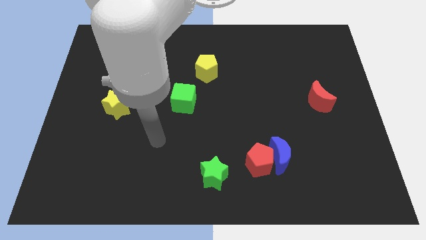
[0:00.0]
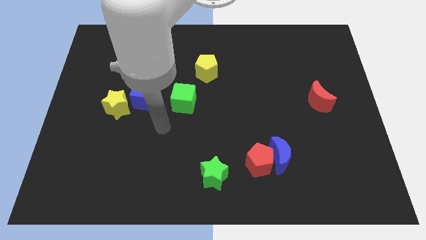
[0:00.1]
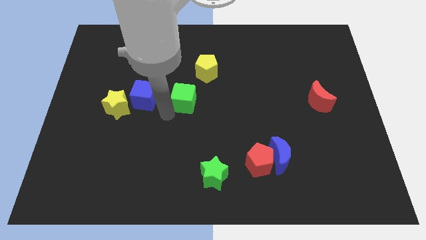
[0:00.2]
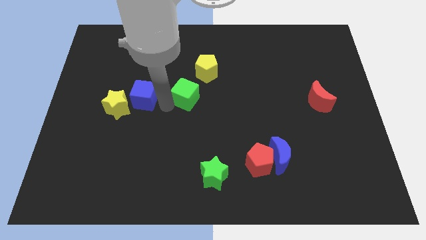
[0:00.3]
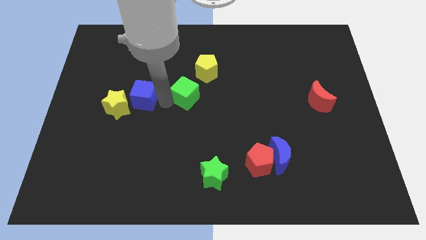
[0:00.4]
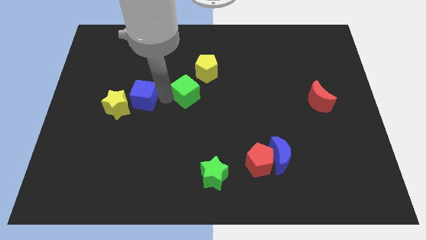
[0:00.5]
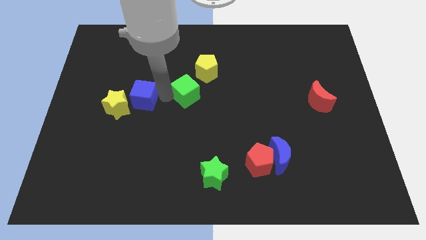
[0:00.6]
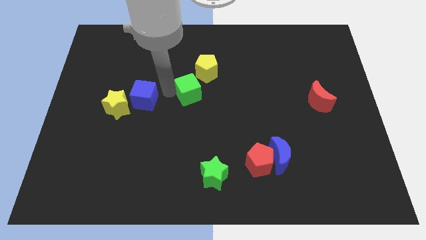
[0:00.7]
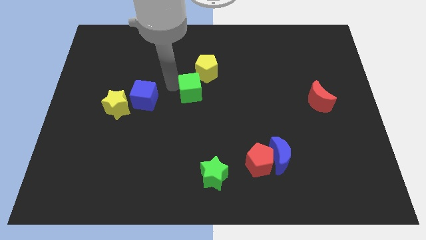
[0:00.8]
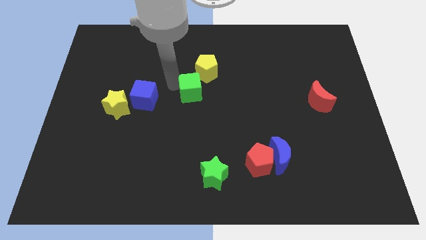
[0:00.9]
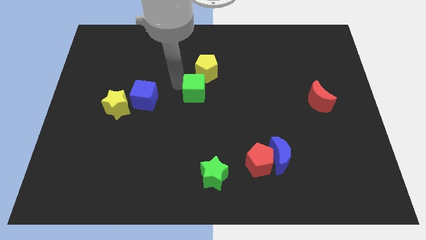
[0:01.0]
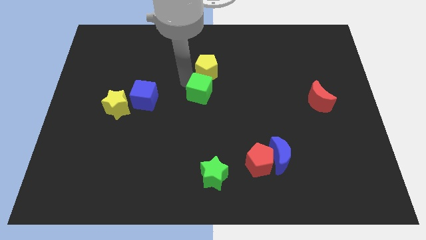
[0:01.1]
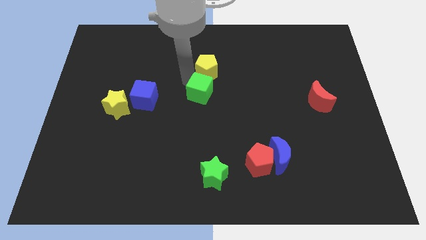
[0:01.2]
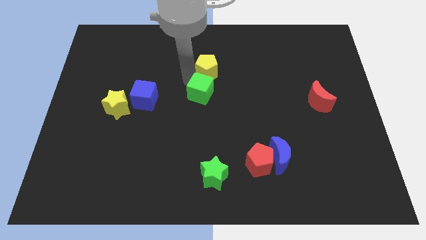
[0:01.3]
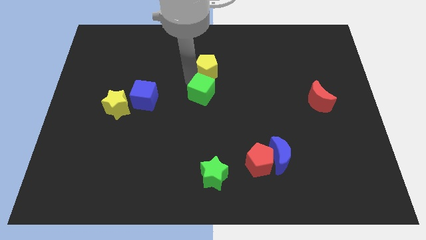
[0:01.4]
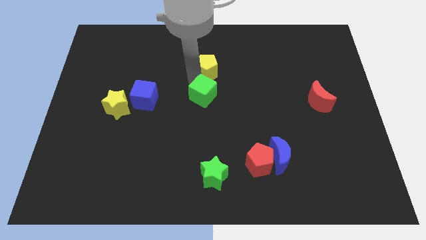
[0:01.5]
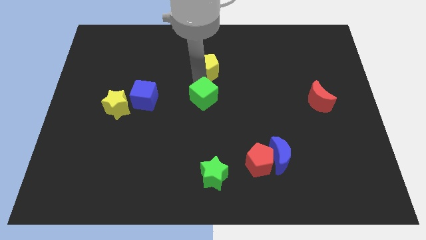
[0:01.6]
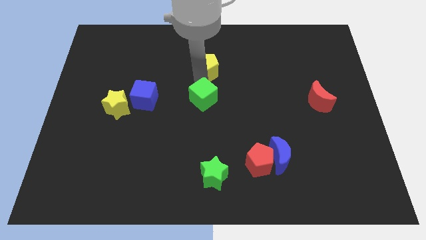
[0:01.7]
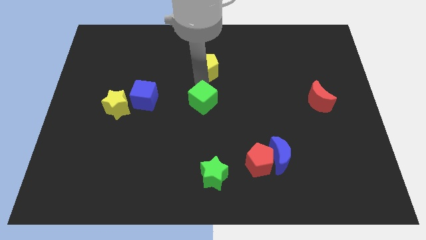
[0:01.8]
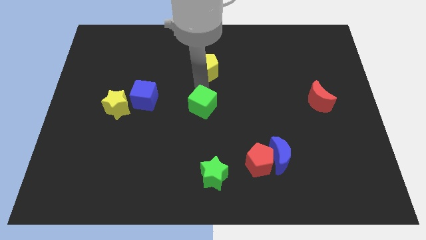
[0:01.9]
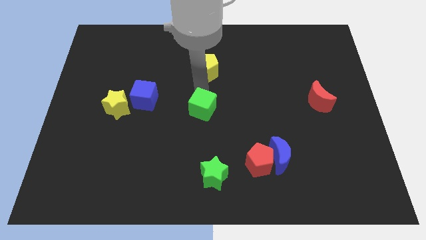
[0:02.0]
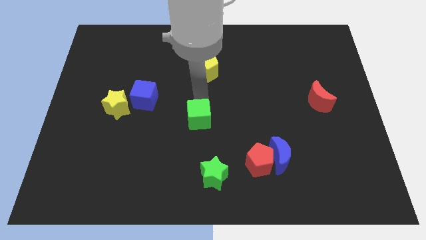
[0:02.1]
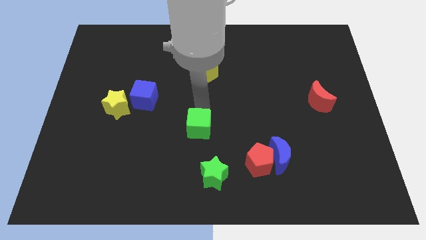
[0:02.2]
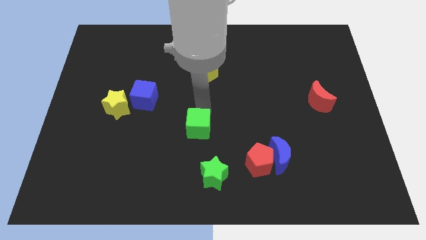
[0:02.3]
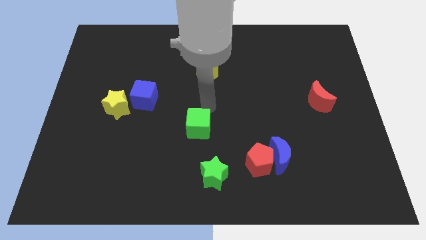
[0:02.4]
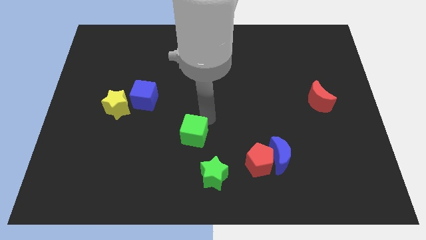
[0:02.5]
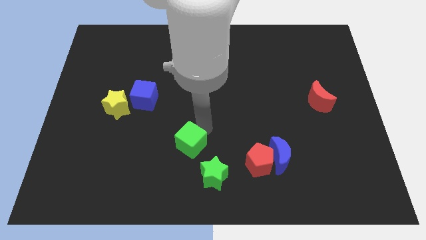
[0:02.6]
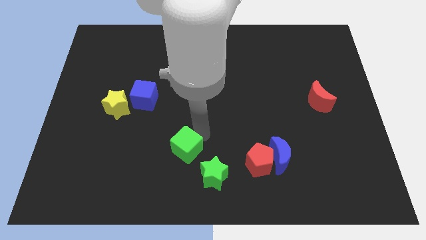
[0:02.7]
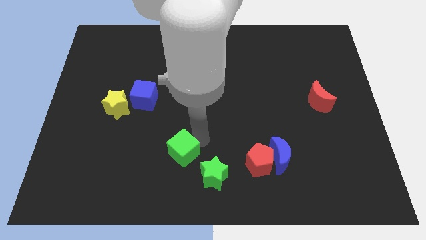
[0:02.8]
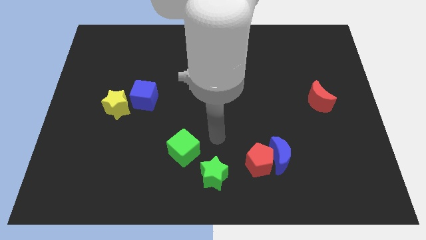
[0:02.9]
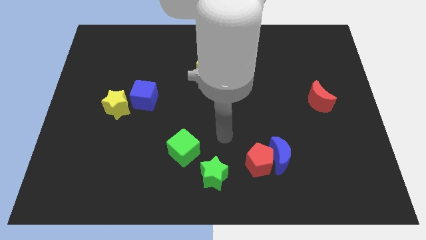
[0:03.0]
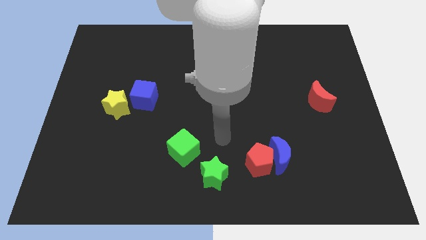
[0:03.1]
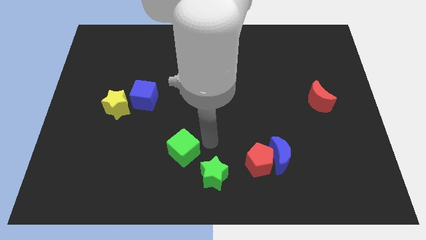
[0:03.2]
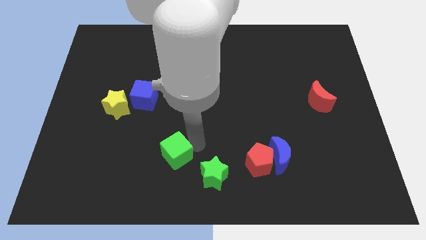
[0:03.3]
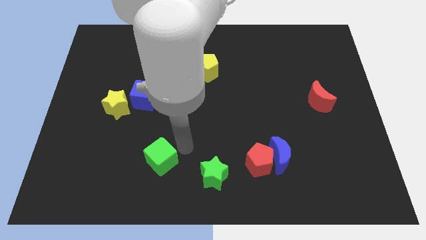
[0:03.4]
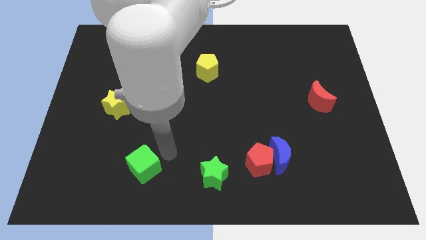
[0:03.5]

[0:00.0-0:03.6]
move the green cube towards bottom

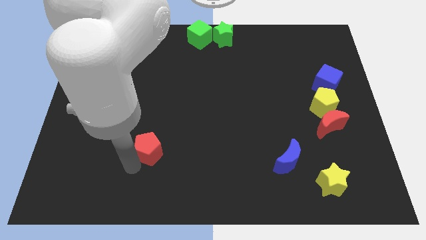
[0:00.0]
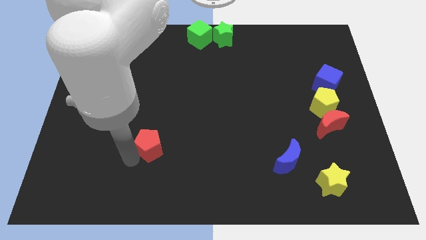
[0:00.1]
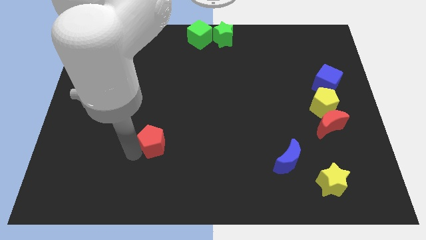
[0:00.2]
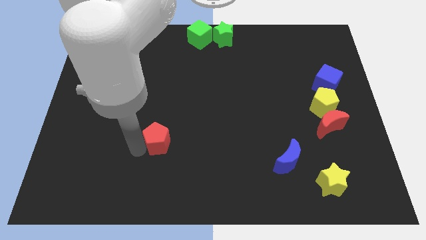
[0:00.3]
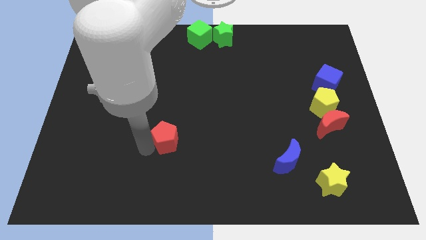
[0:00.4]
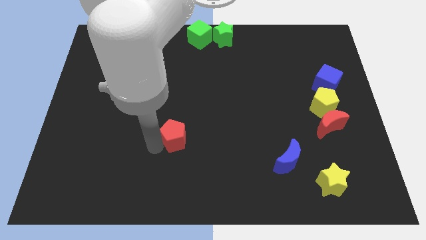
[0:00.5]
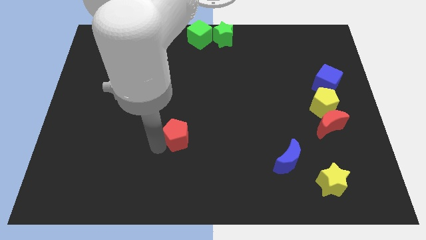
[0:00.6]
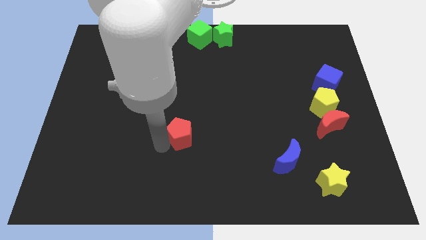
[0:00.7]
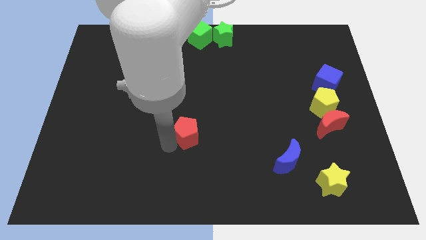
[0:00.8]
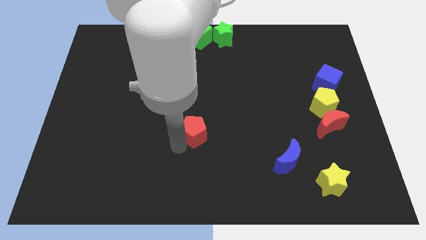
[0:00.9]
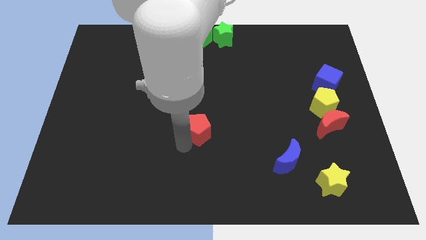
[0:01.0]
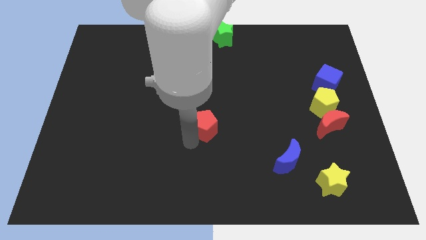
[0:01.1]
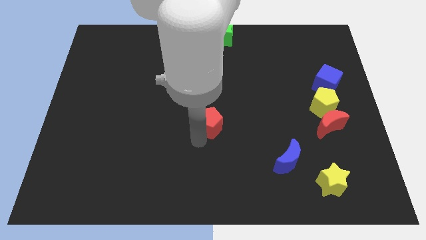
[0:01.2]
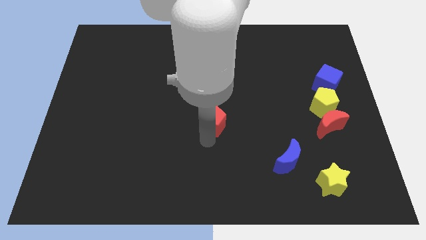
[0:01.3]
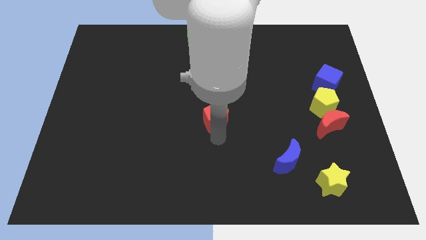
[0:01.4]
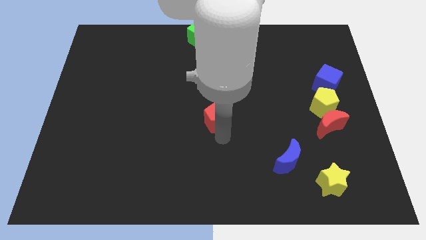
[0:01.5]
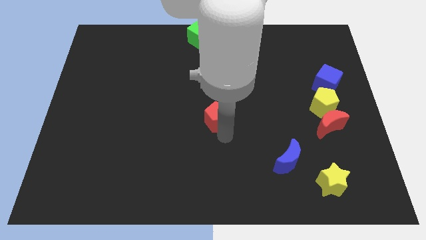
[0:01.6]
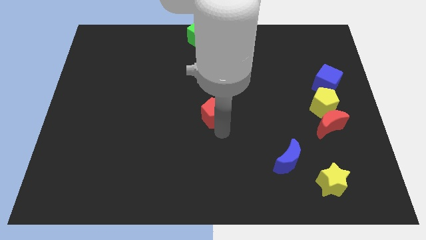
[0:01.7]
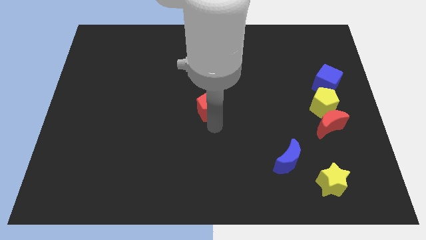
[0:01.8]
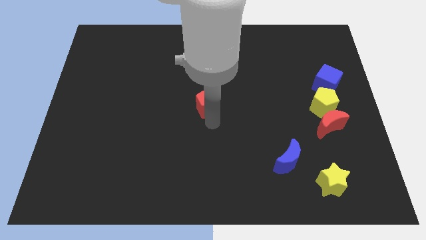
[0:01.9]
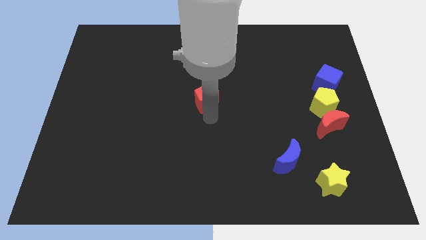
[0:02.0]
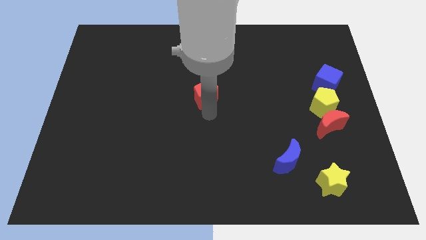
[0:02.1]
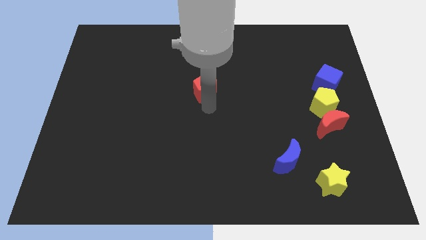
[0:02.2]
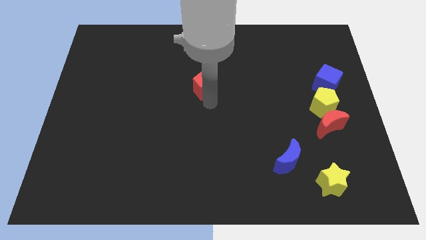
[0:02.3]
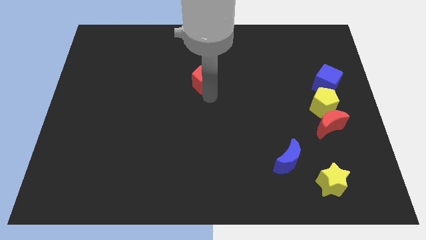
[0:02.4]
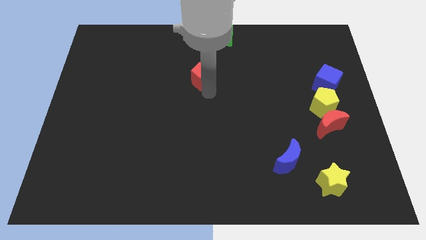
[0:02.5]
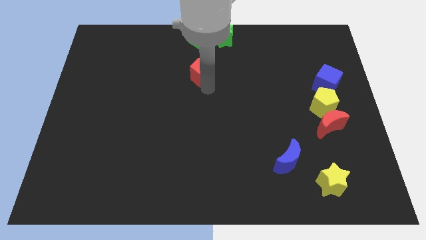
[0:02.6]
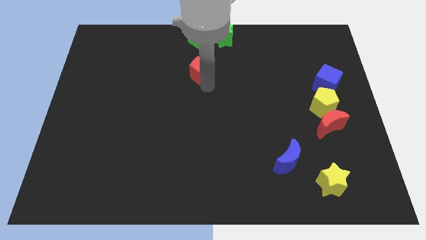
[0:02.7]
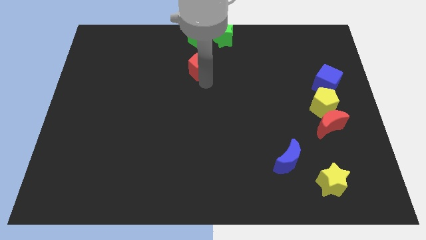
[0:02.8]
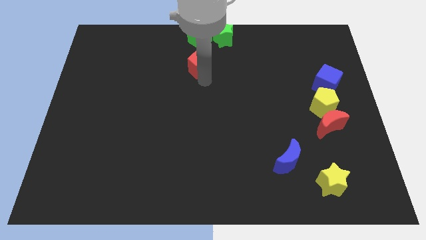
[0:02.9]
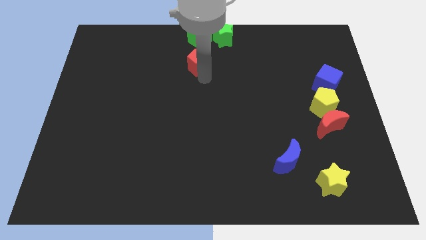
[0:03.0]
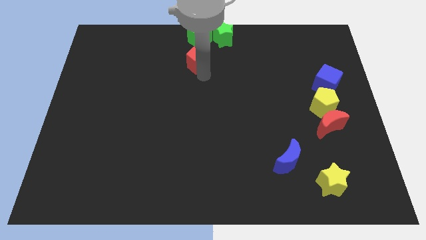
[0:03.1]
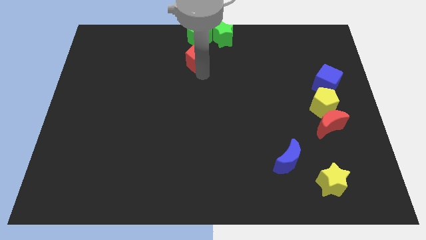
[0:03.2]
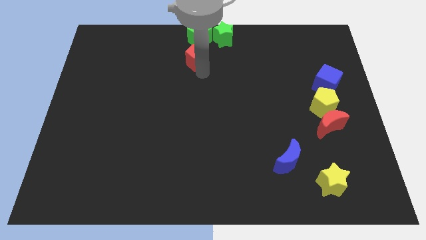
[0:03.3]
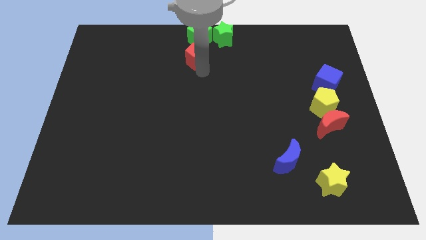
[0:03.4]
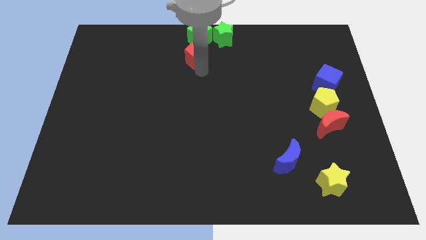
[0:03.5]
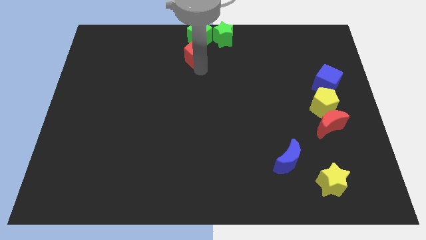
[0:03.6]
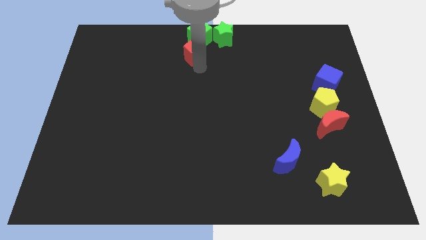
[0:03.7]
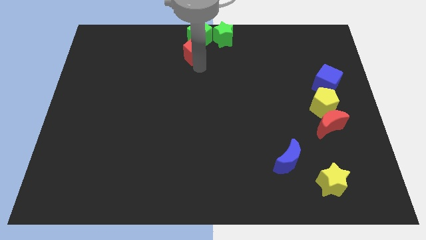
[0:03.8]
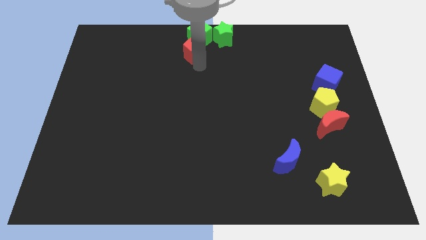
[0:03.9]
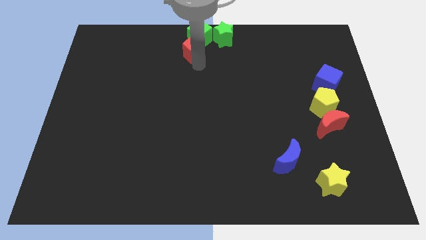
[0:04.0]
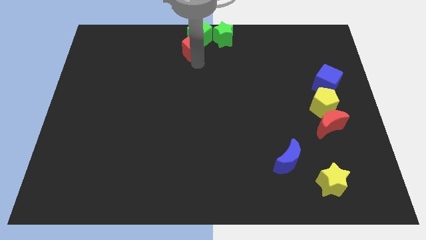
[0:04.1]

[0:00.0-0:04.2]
move the red pentagon below the green cube at the top center of the board

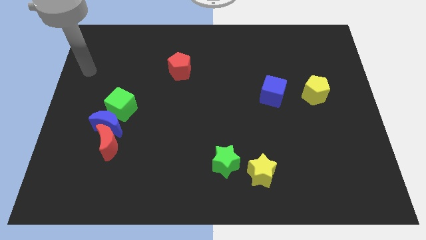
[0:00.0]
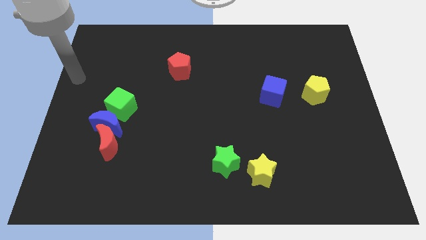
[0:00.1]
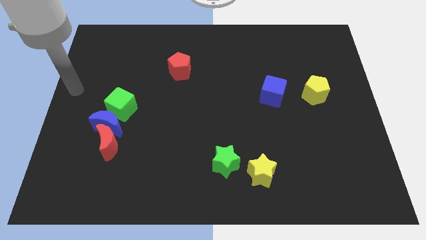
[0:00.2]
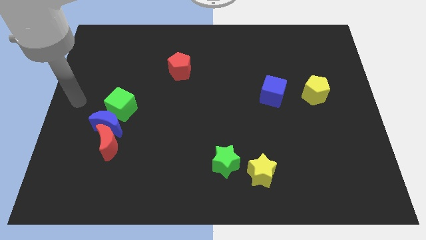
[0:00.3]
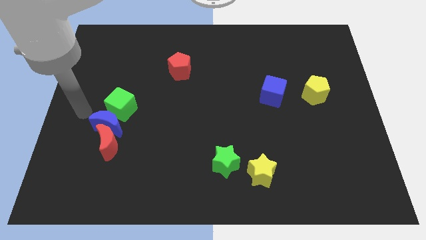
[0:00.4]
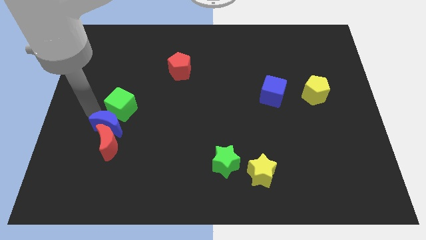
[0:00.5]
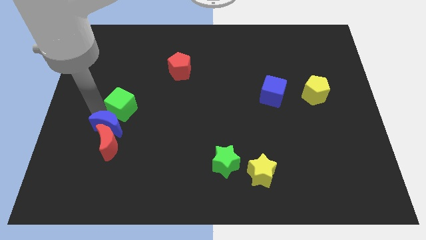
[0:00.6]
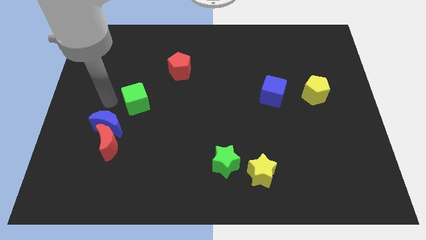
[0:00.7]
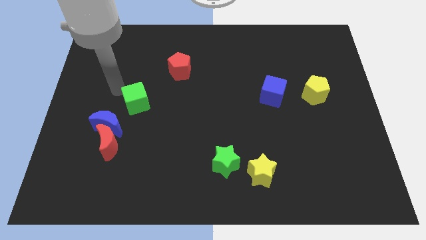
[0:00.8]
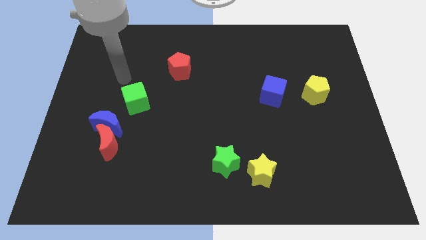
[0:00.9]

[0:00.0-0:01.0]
separate the green cube and blue moon
